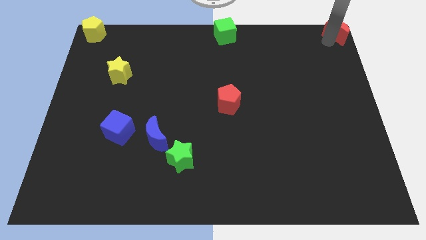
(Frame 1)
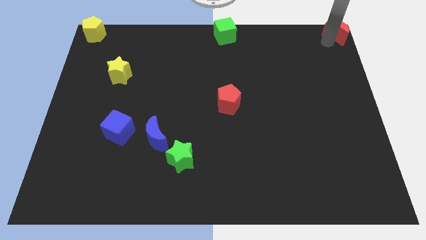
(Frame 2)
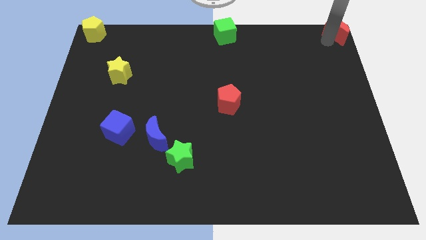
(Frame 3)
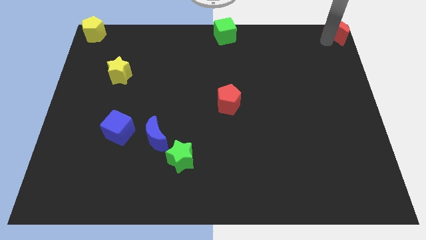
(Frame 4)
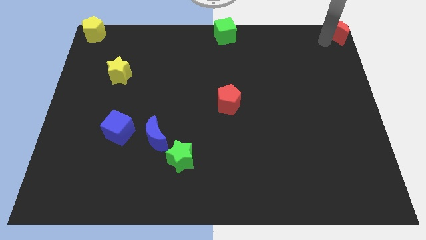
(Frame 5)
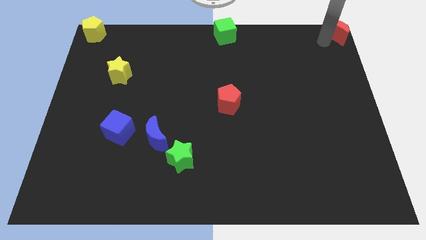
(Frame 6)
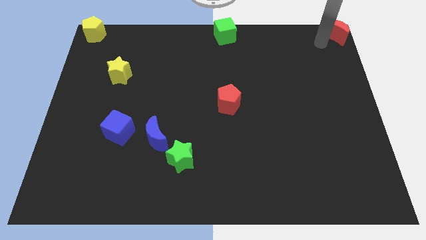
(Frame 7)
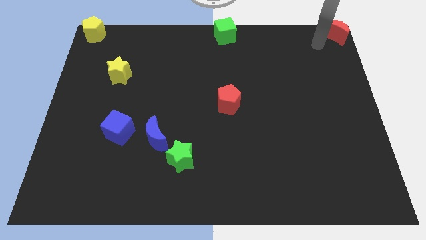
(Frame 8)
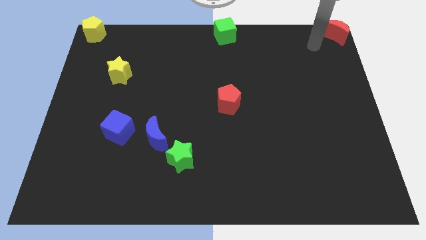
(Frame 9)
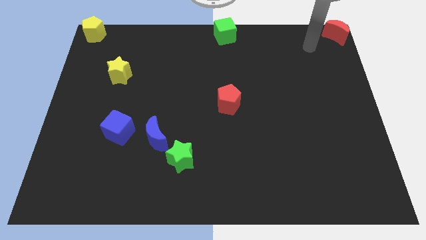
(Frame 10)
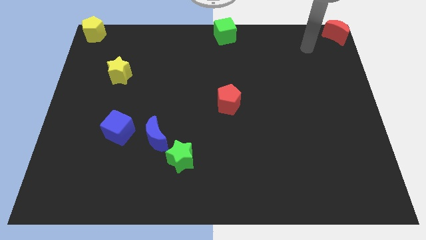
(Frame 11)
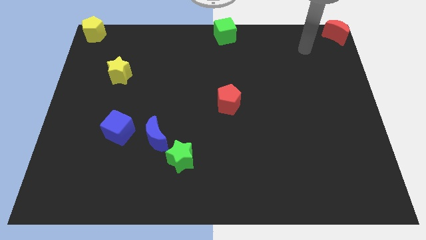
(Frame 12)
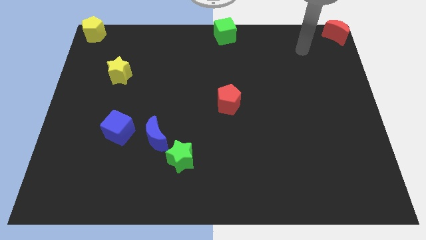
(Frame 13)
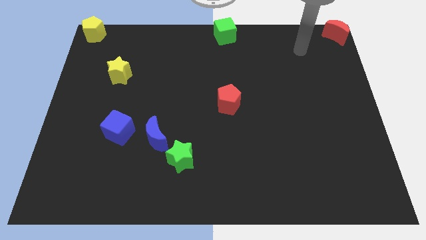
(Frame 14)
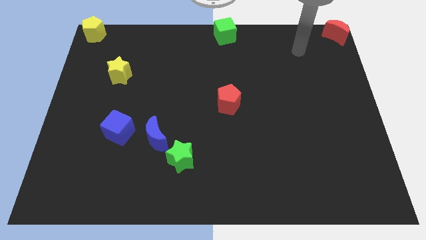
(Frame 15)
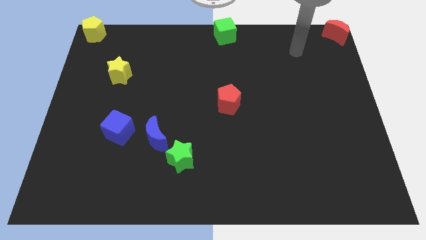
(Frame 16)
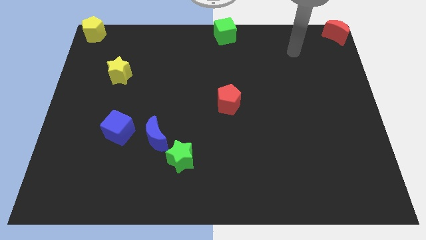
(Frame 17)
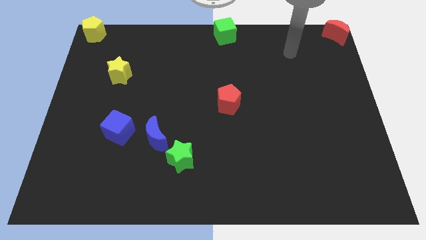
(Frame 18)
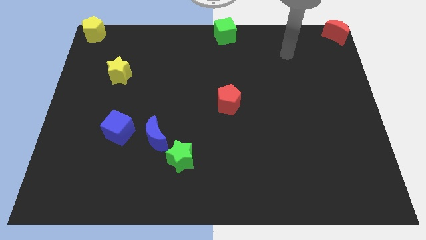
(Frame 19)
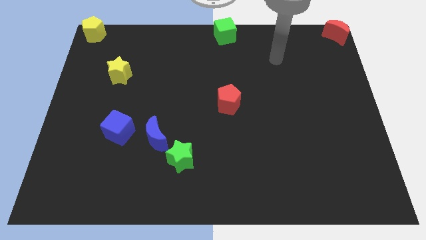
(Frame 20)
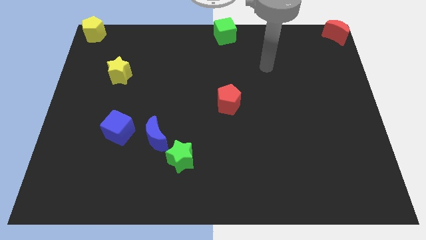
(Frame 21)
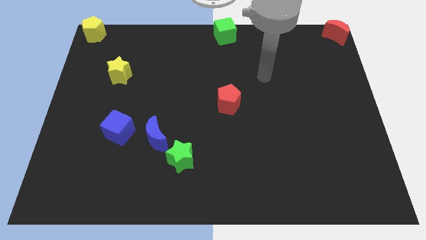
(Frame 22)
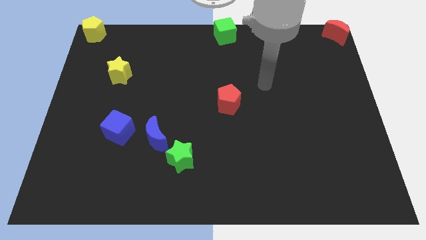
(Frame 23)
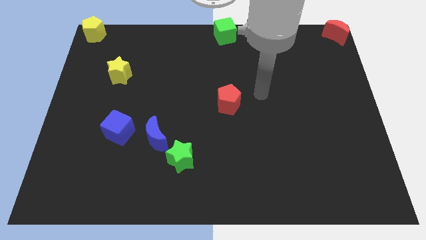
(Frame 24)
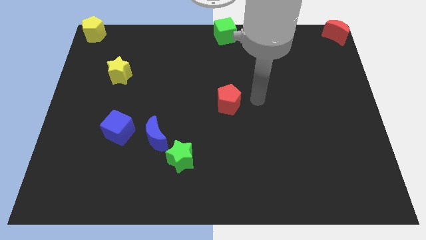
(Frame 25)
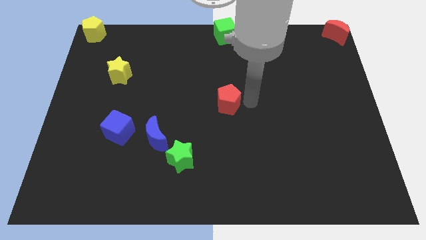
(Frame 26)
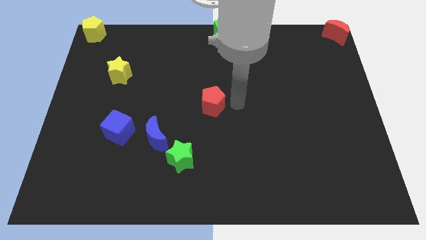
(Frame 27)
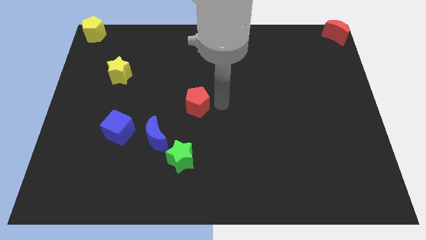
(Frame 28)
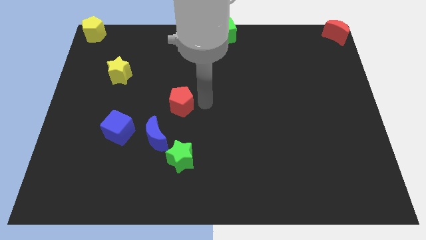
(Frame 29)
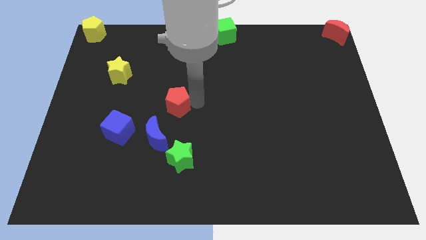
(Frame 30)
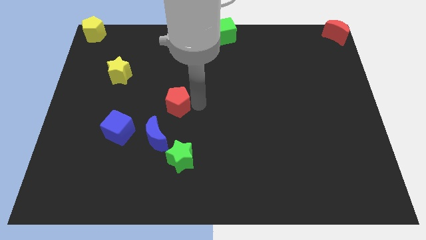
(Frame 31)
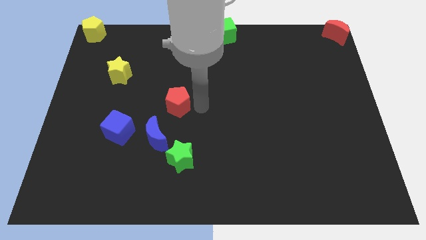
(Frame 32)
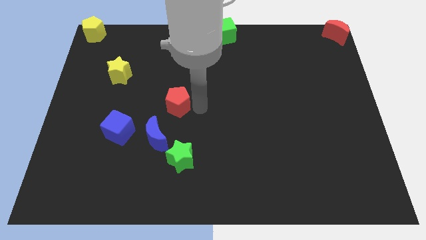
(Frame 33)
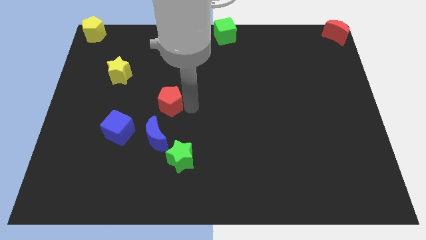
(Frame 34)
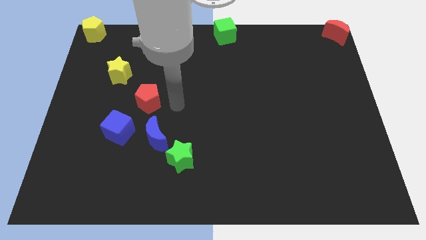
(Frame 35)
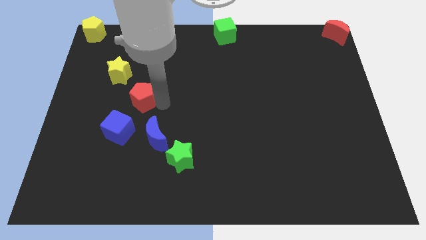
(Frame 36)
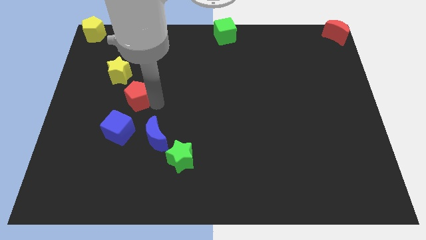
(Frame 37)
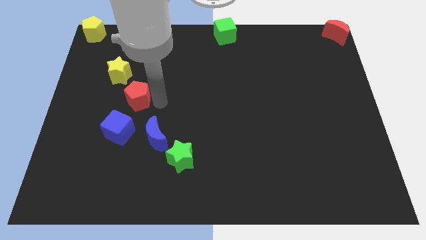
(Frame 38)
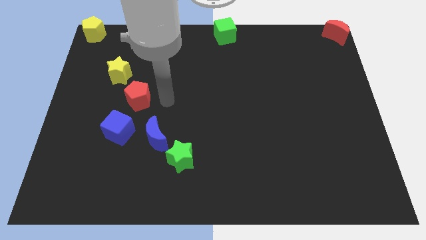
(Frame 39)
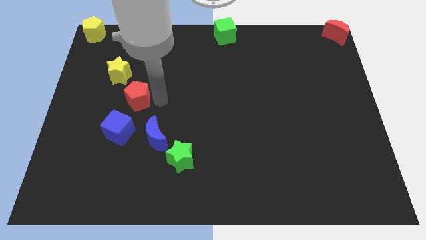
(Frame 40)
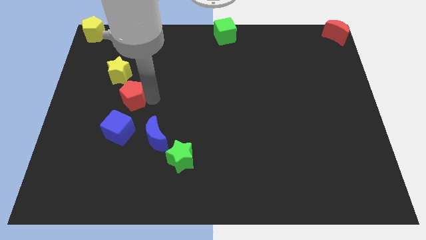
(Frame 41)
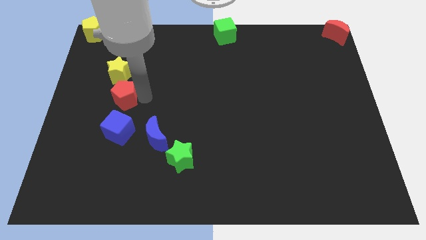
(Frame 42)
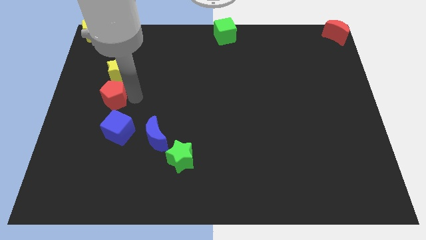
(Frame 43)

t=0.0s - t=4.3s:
place red pentagon below yellow star

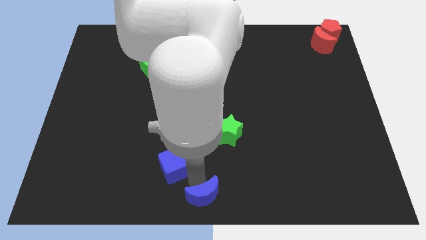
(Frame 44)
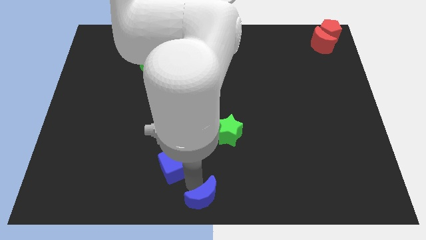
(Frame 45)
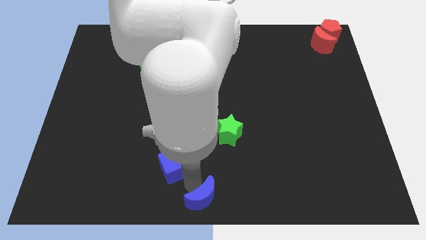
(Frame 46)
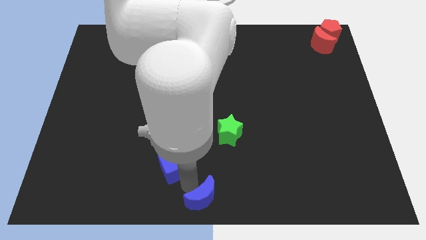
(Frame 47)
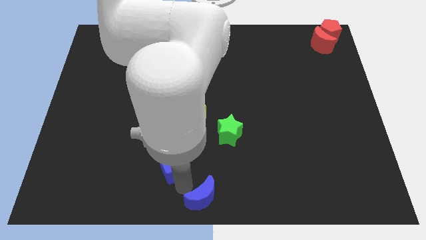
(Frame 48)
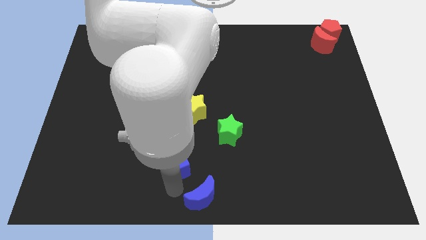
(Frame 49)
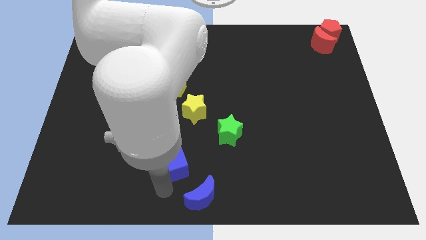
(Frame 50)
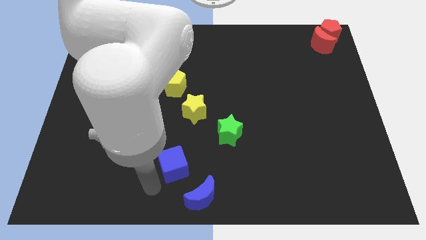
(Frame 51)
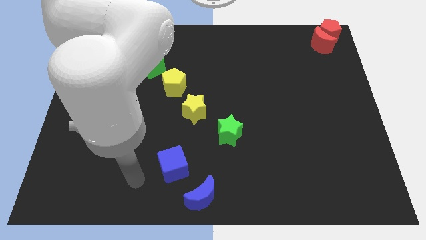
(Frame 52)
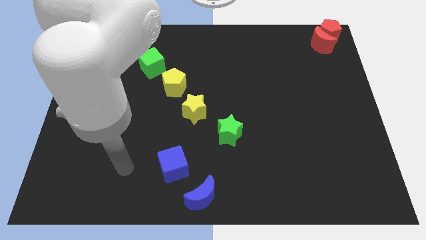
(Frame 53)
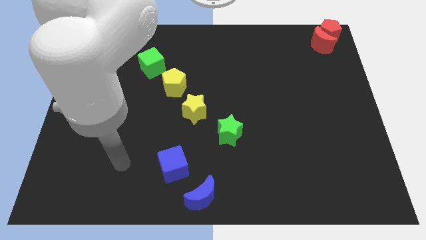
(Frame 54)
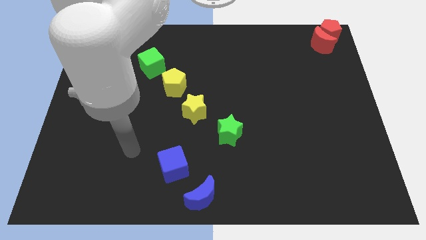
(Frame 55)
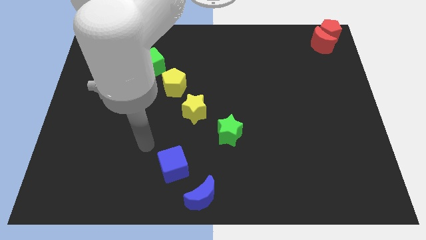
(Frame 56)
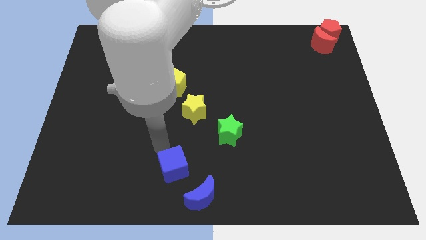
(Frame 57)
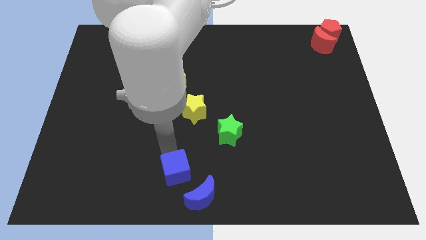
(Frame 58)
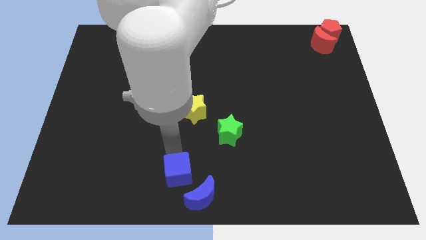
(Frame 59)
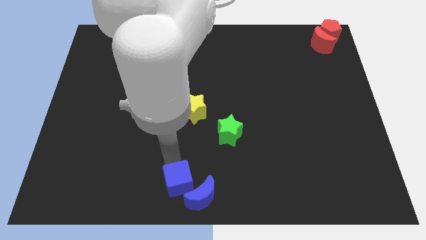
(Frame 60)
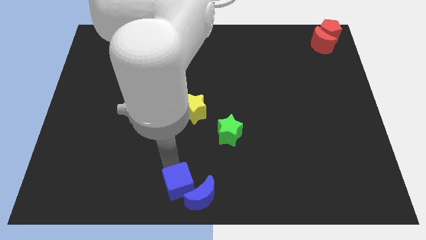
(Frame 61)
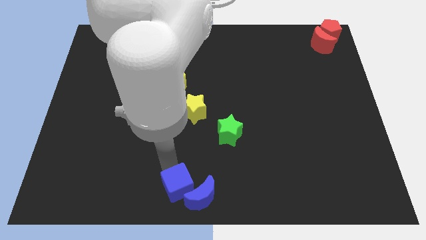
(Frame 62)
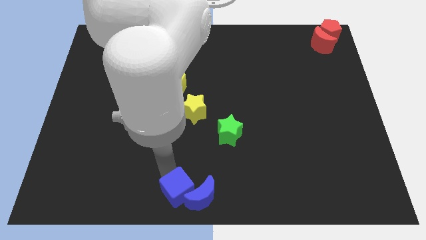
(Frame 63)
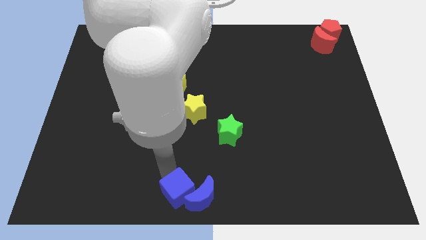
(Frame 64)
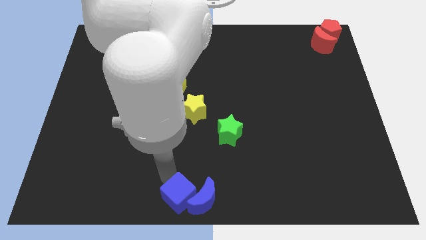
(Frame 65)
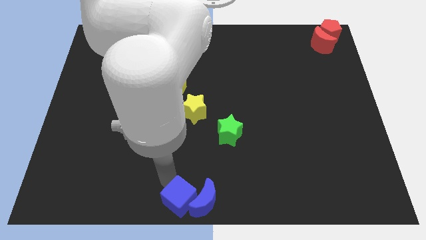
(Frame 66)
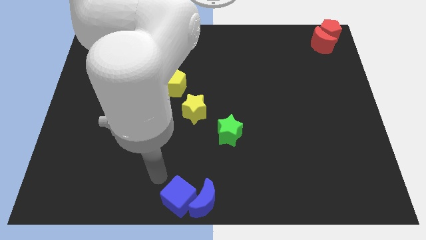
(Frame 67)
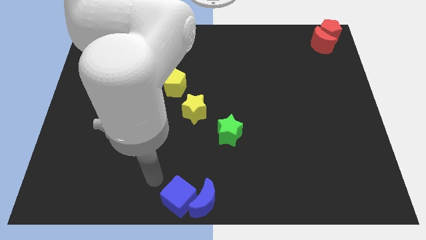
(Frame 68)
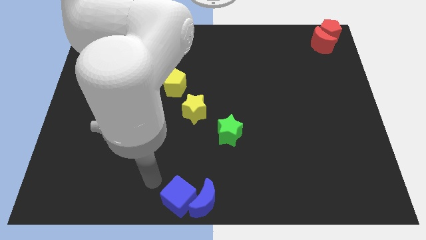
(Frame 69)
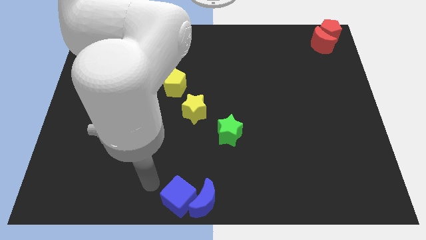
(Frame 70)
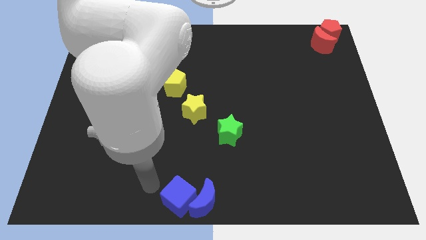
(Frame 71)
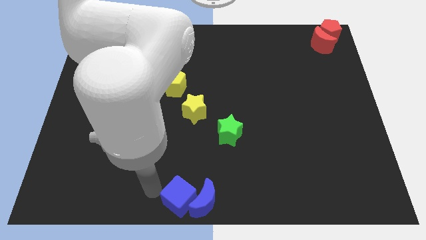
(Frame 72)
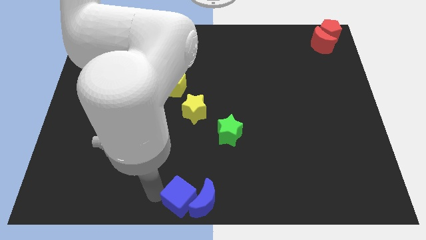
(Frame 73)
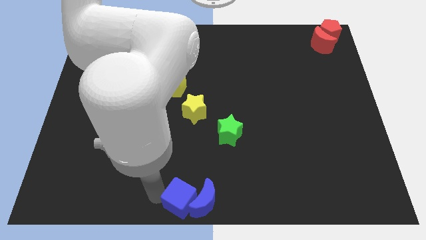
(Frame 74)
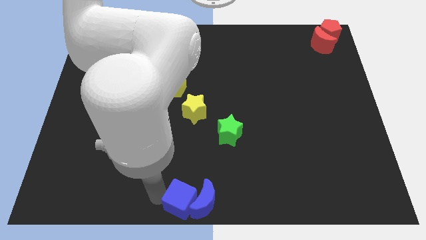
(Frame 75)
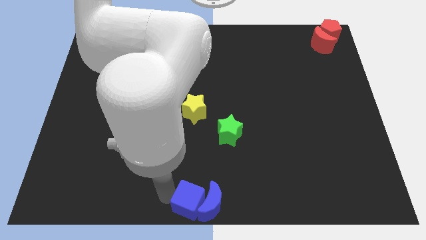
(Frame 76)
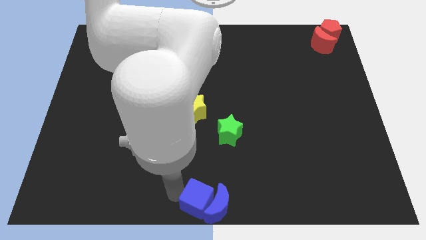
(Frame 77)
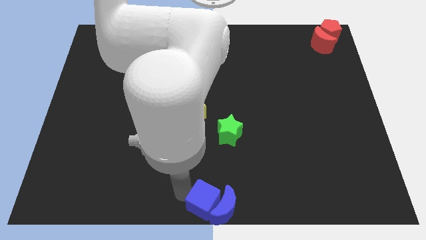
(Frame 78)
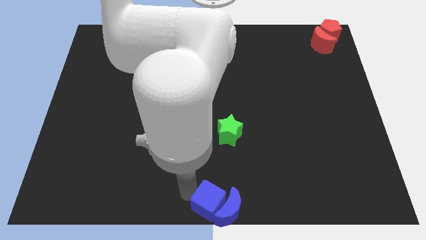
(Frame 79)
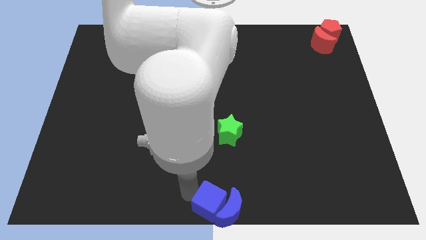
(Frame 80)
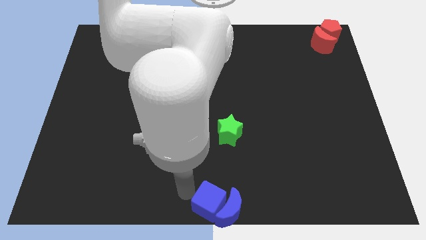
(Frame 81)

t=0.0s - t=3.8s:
push the blue cube into the blue moon

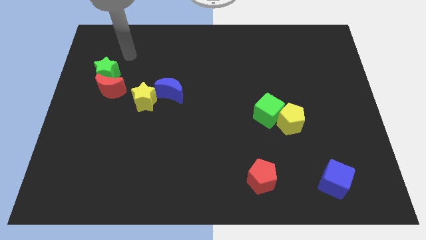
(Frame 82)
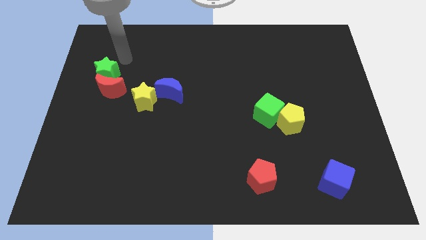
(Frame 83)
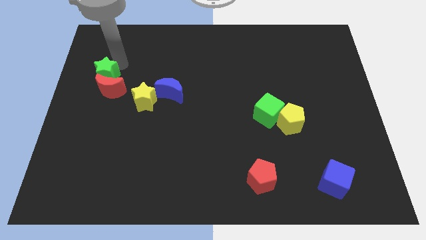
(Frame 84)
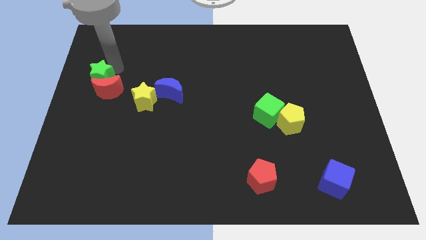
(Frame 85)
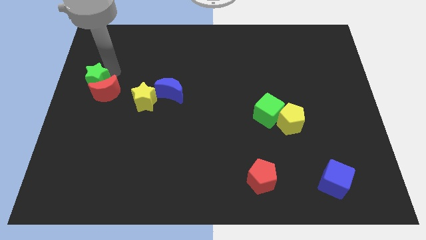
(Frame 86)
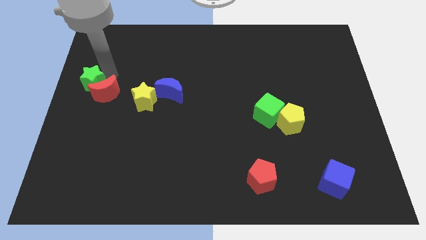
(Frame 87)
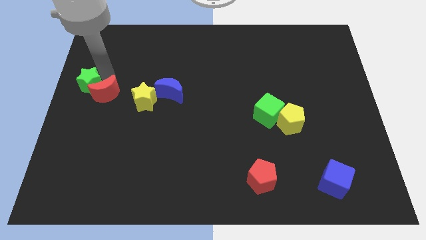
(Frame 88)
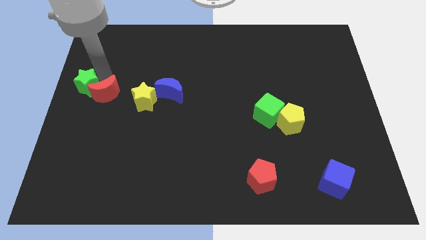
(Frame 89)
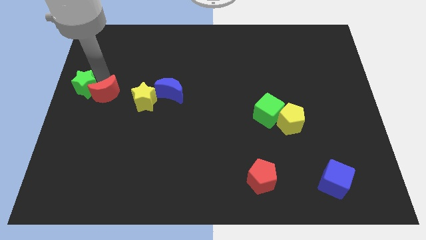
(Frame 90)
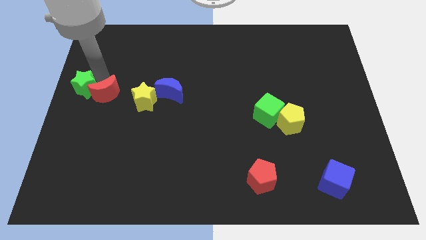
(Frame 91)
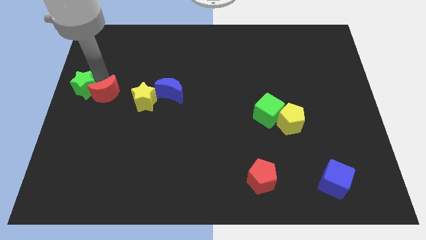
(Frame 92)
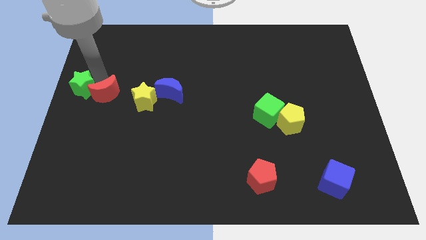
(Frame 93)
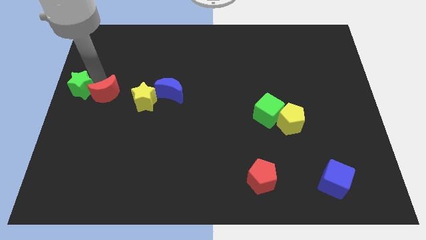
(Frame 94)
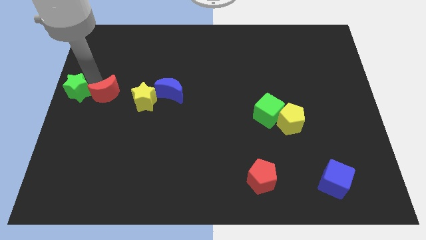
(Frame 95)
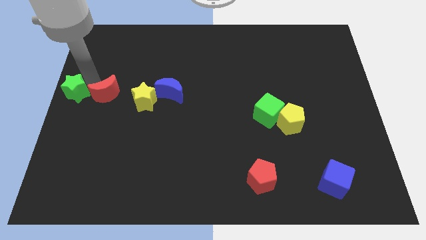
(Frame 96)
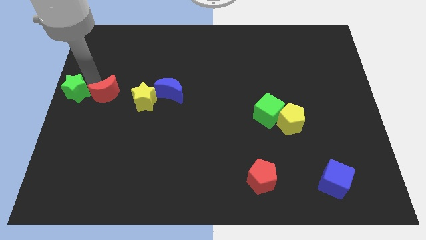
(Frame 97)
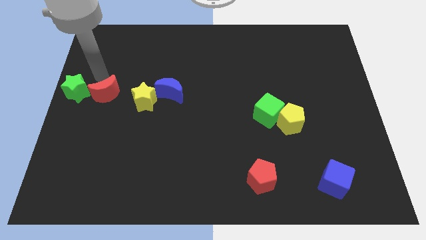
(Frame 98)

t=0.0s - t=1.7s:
separate the green star from the red moon
